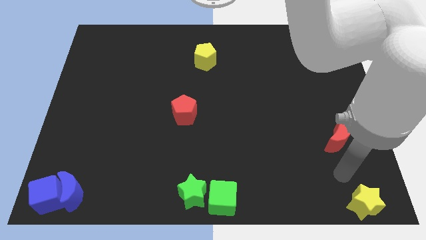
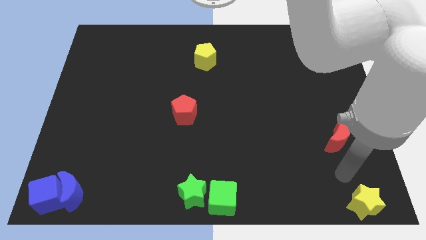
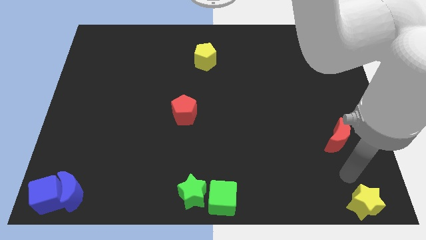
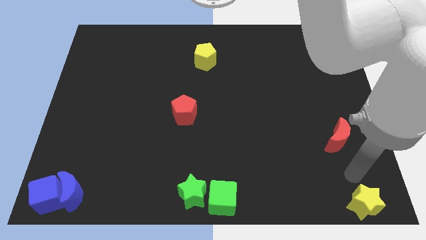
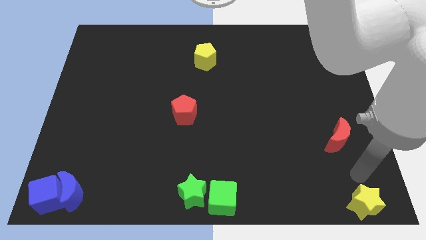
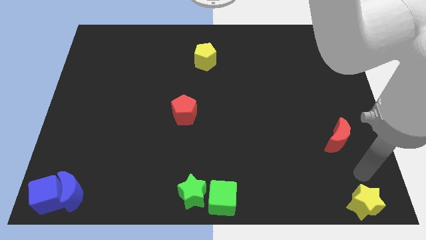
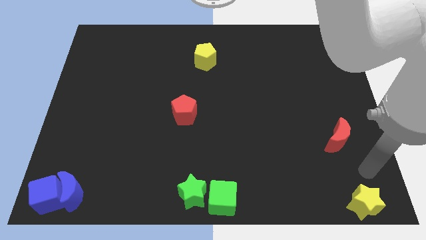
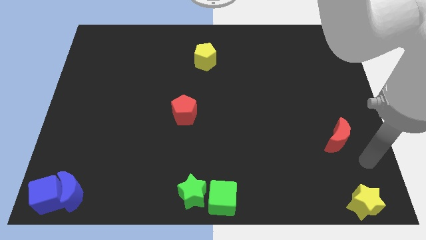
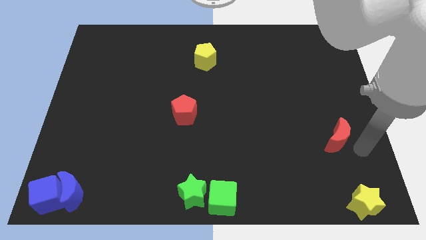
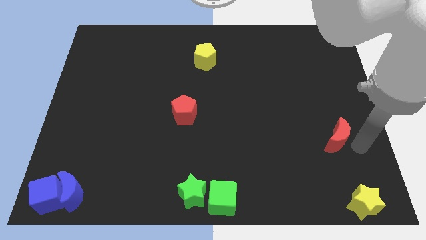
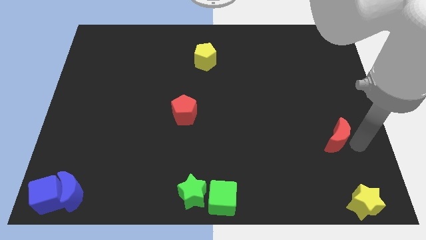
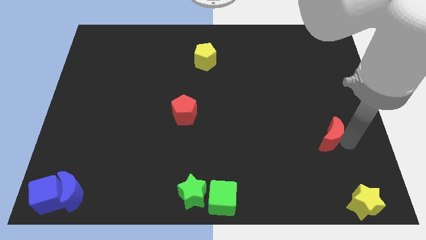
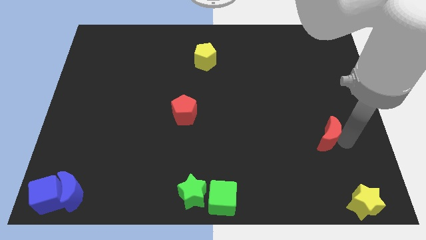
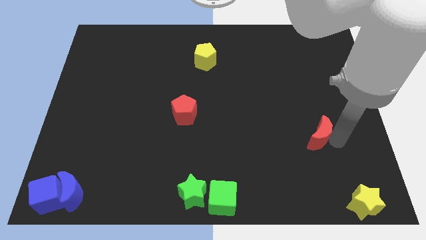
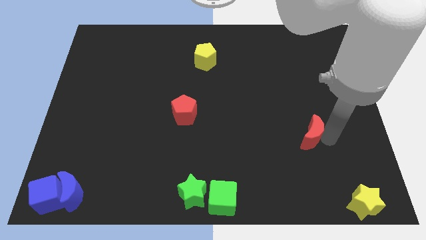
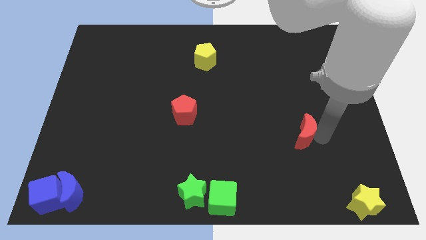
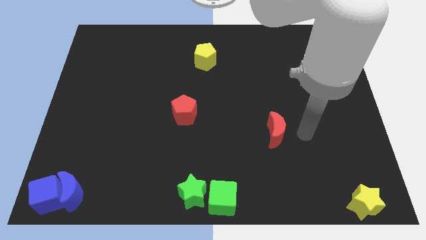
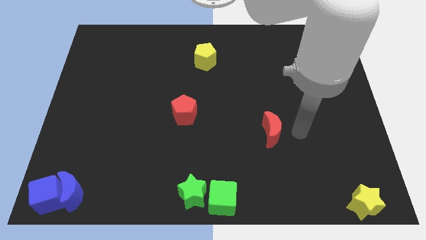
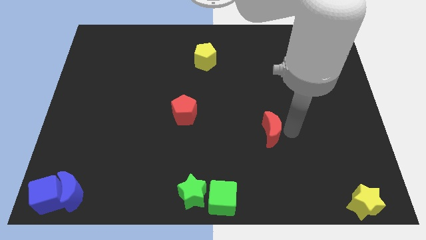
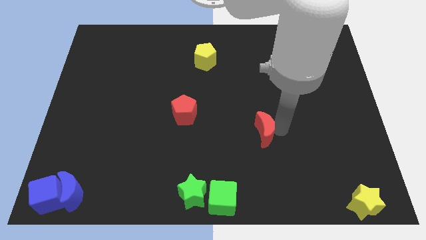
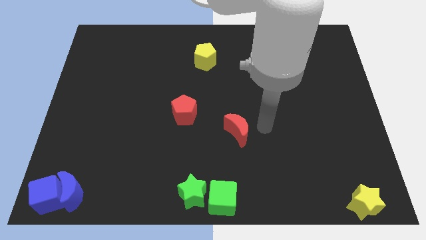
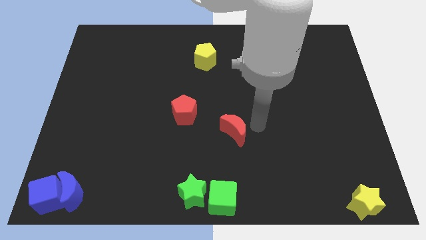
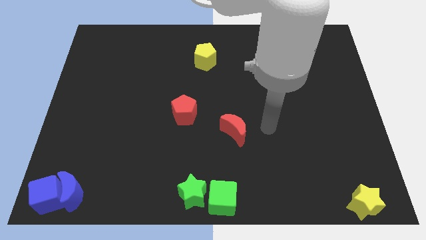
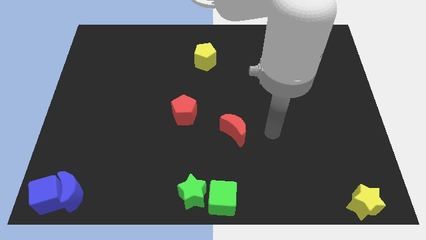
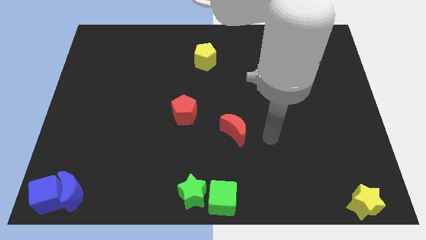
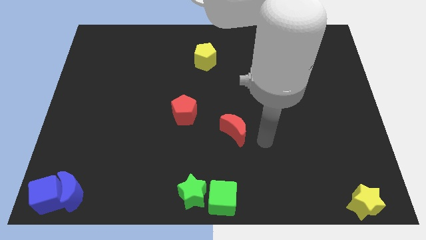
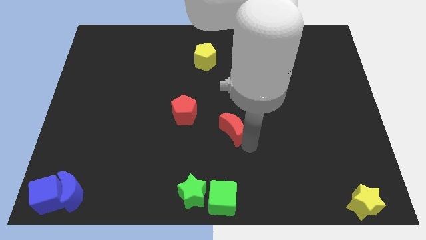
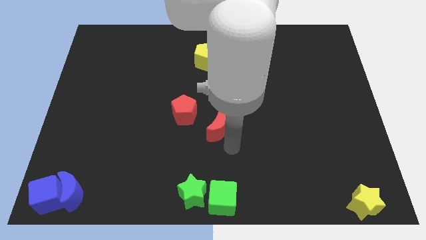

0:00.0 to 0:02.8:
push red crescent above green cube

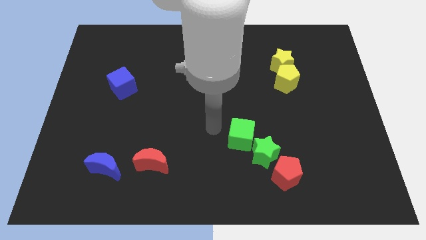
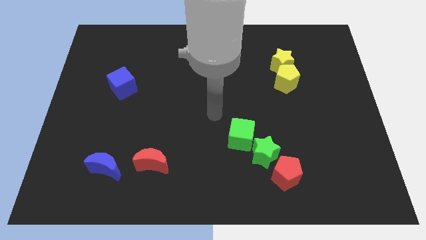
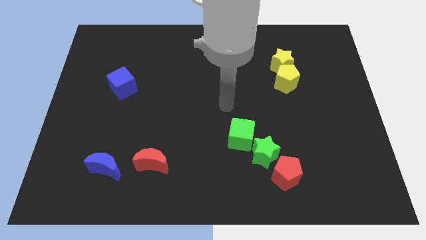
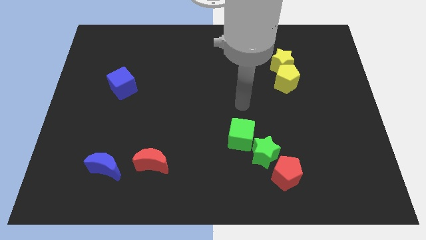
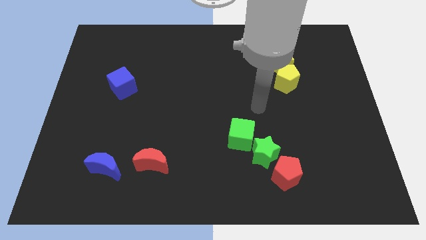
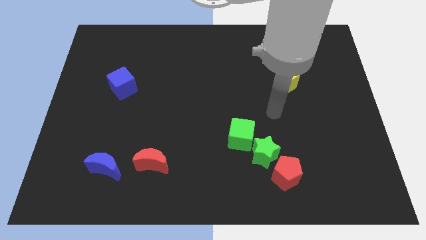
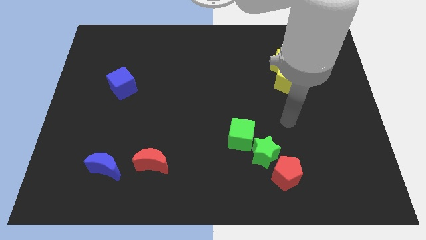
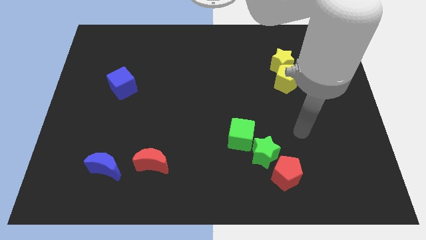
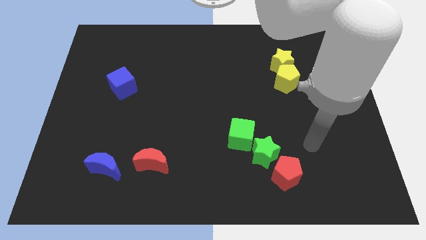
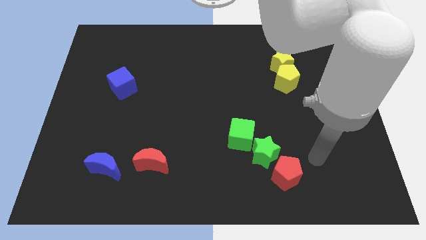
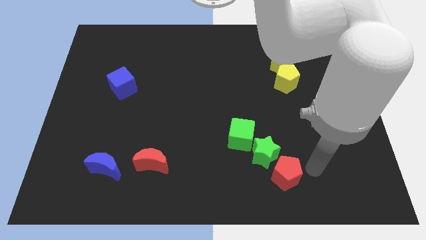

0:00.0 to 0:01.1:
move your arm away from green cube

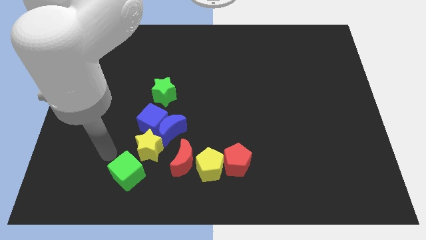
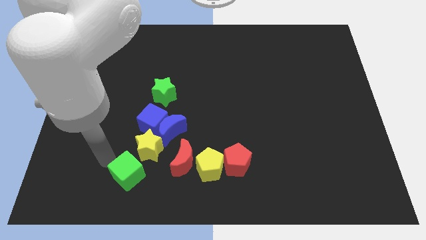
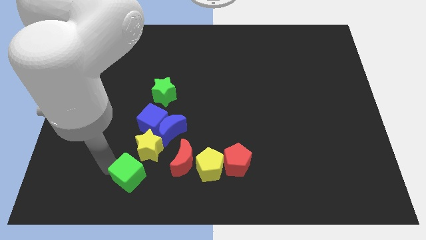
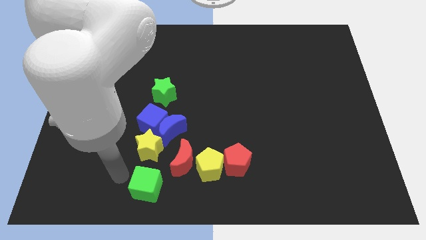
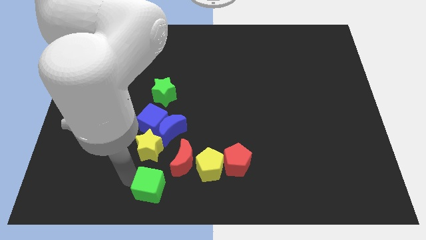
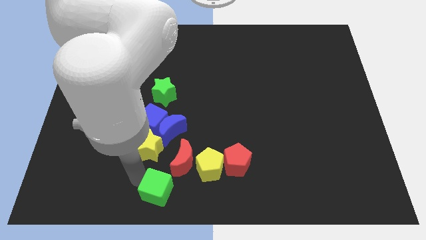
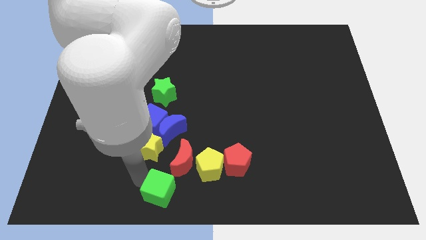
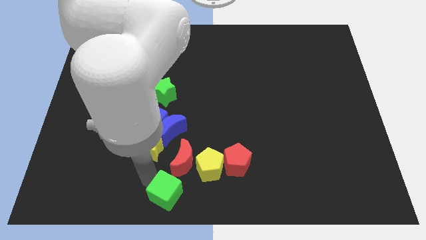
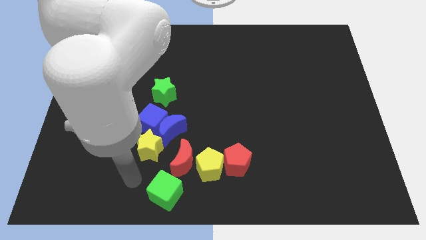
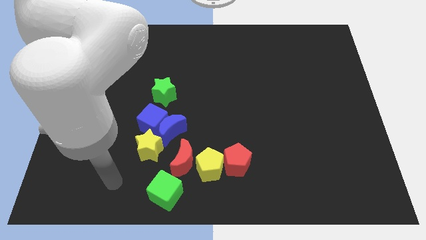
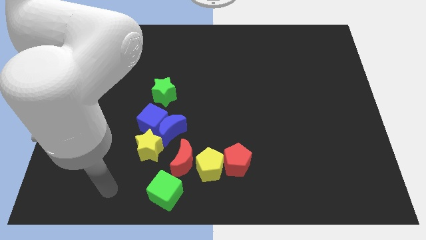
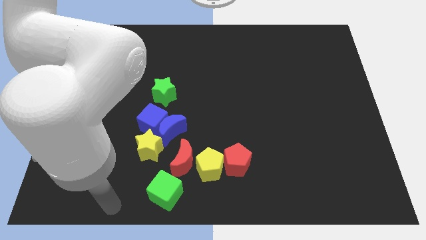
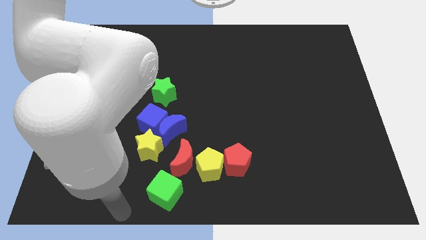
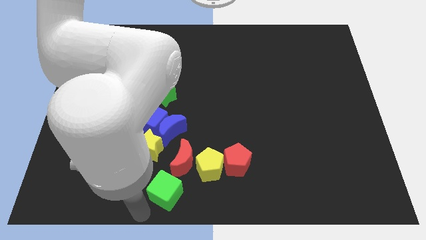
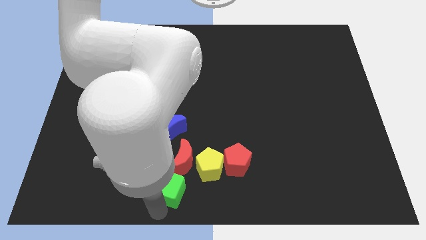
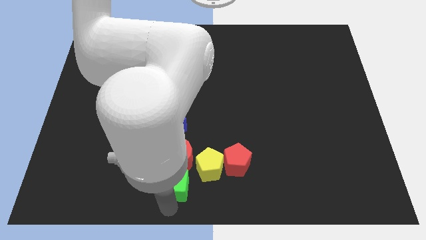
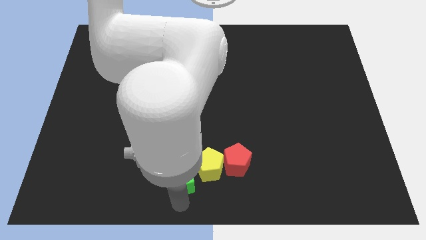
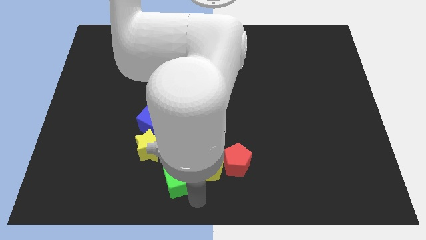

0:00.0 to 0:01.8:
place the green cube above the red crescent

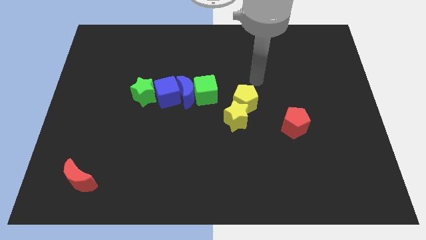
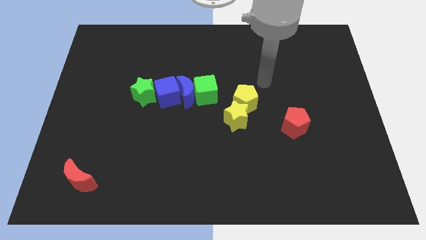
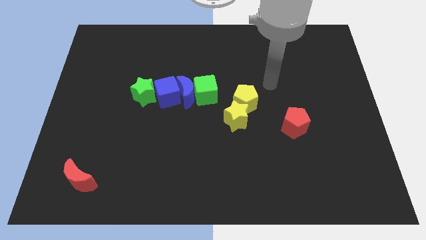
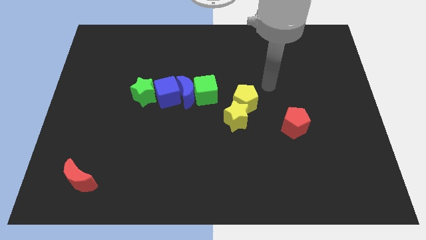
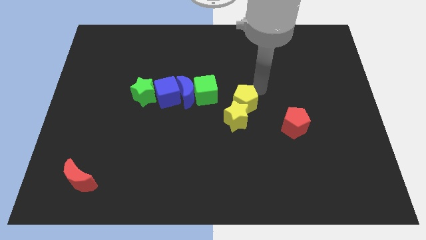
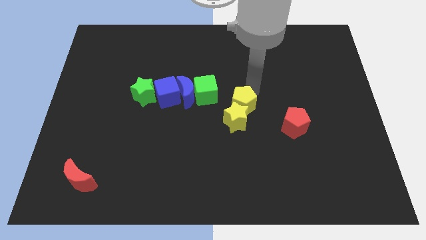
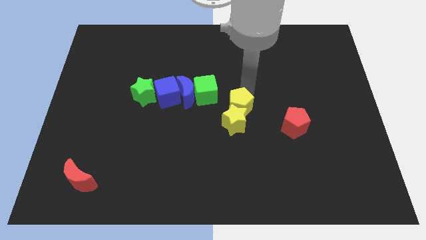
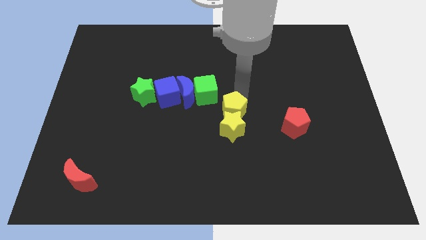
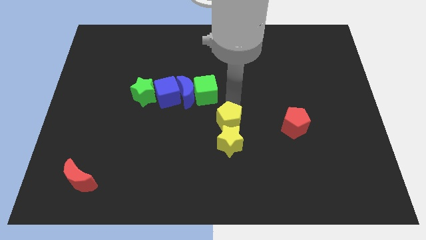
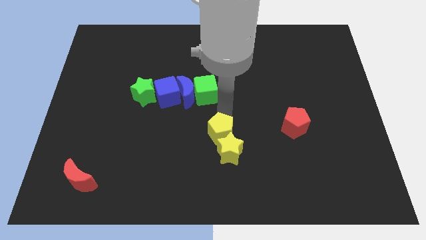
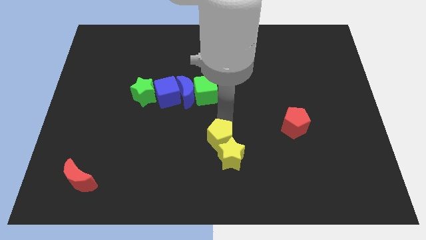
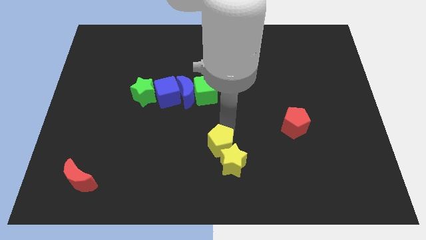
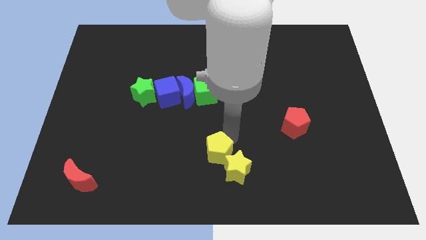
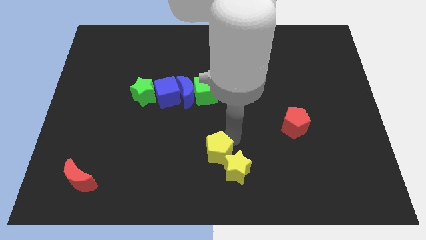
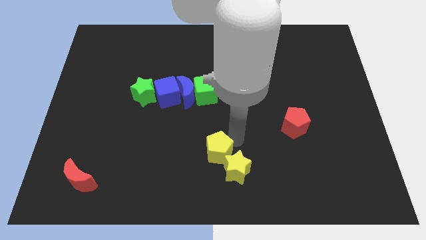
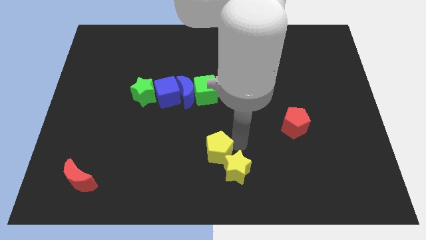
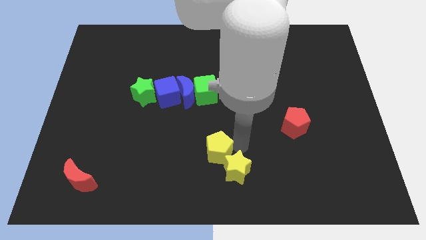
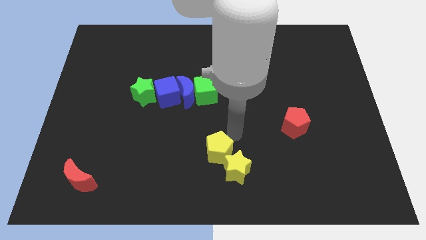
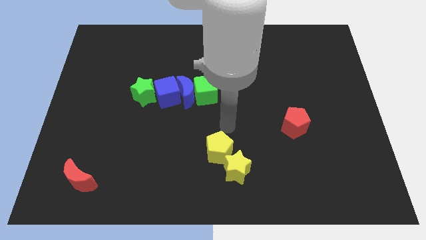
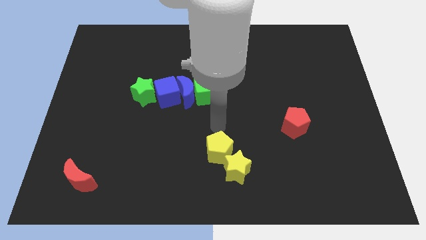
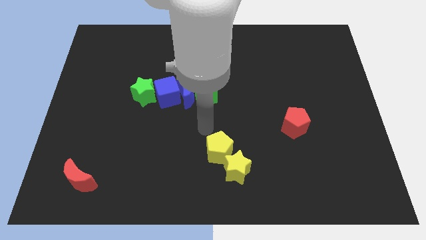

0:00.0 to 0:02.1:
slide the yellow blocks towards the bottom of the board

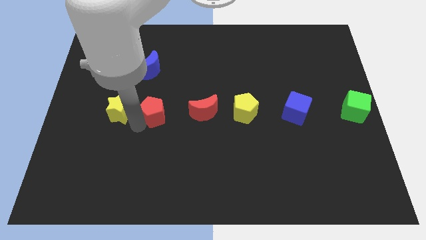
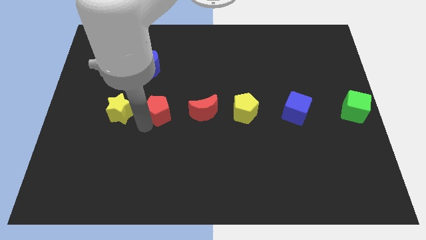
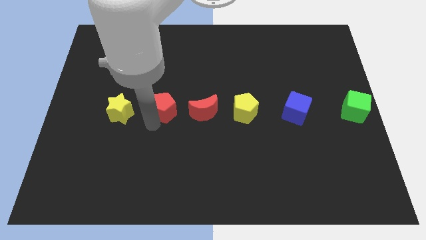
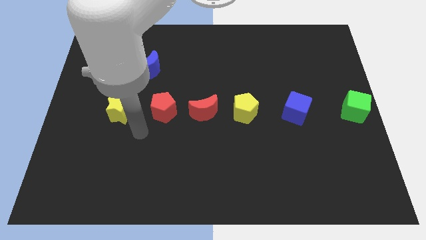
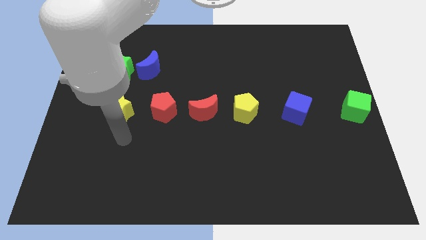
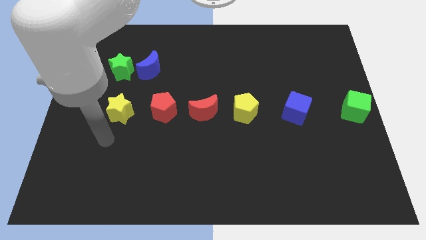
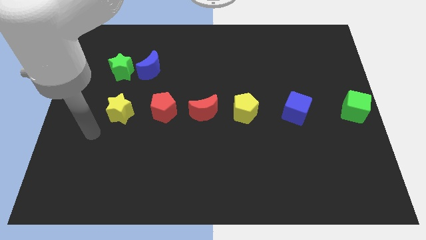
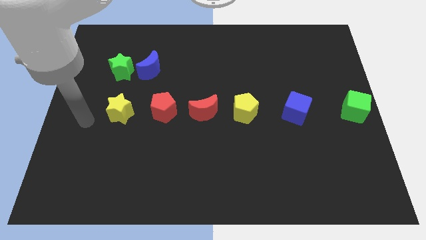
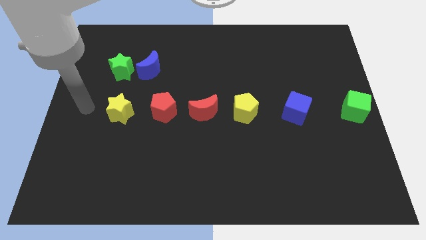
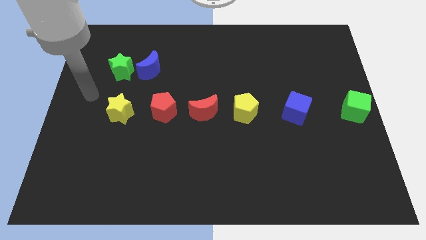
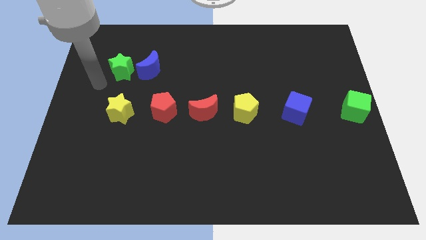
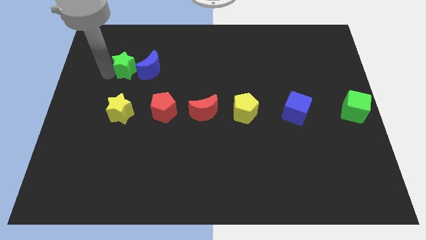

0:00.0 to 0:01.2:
move your arm towards the green star
